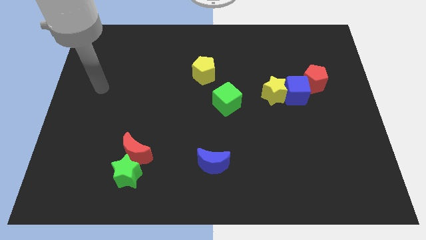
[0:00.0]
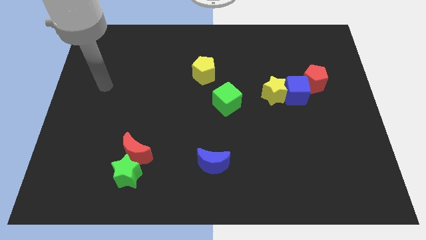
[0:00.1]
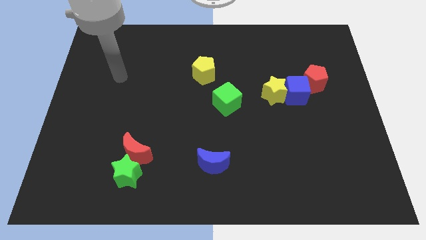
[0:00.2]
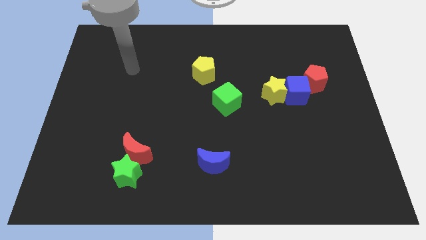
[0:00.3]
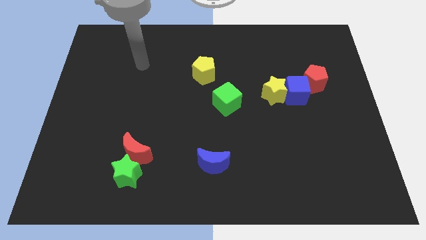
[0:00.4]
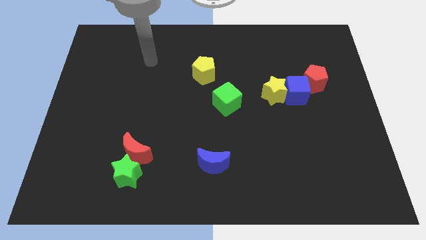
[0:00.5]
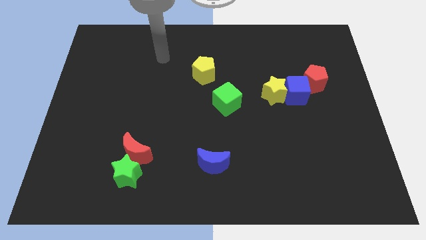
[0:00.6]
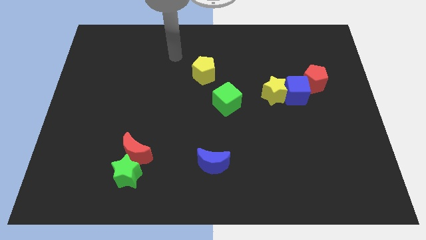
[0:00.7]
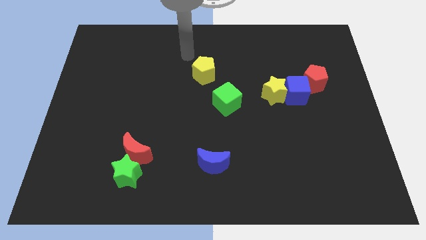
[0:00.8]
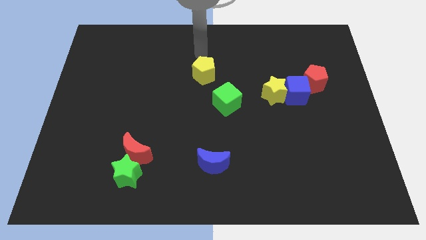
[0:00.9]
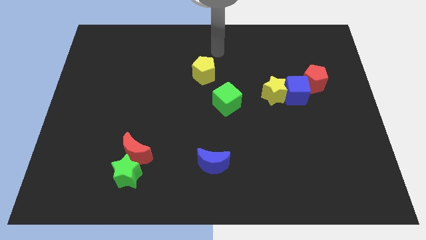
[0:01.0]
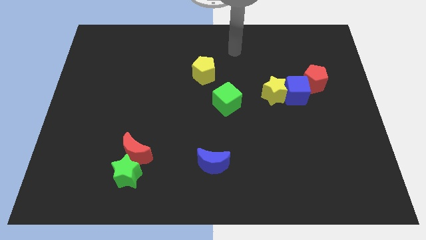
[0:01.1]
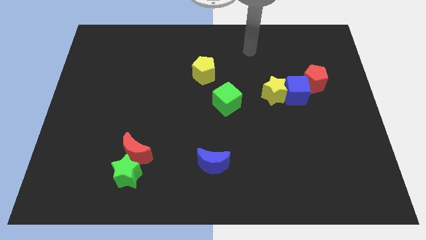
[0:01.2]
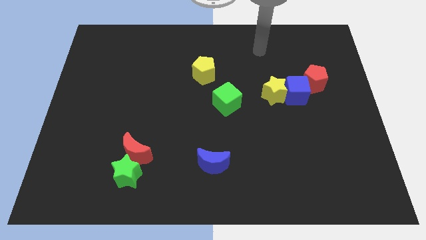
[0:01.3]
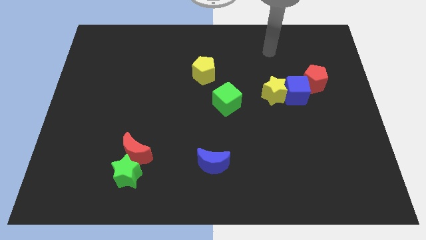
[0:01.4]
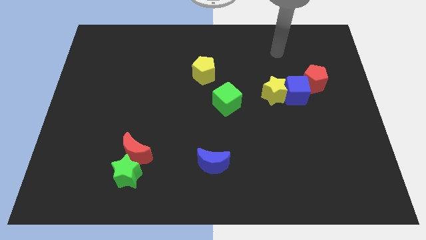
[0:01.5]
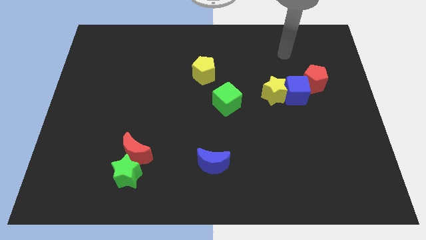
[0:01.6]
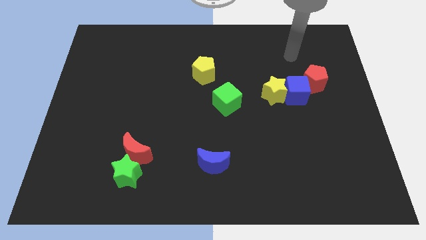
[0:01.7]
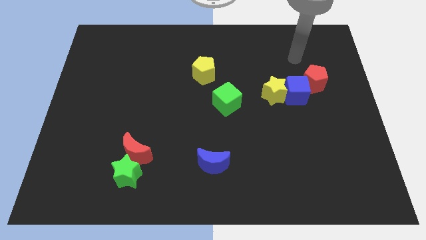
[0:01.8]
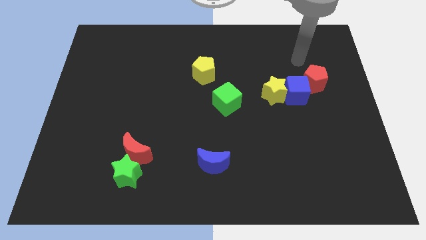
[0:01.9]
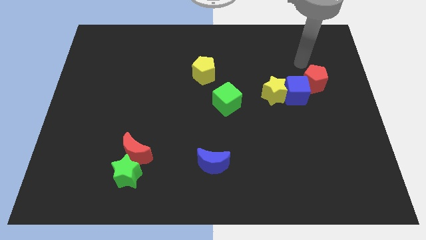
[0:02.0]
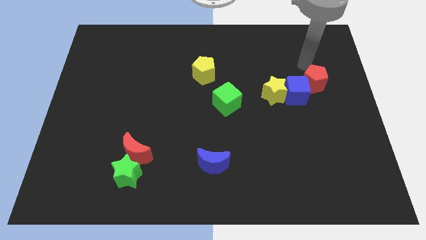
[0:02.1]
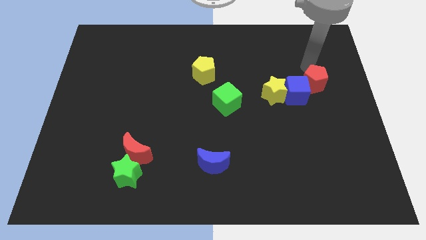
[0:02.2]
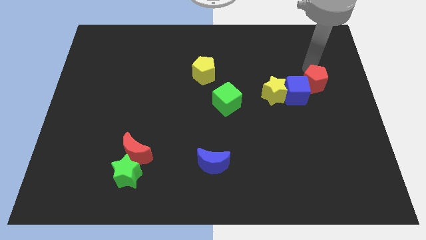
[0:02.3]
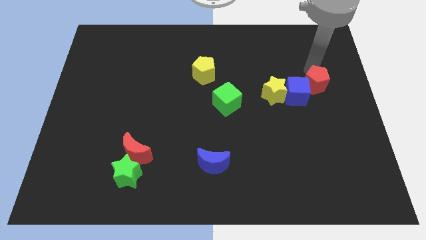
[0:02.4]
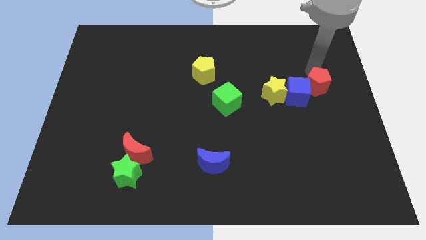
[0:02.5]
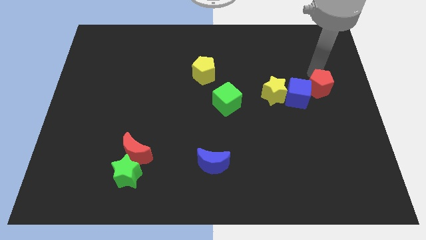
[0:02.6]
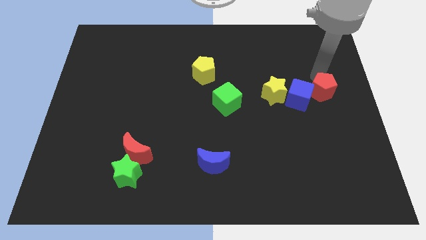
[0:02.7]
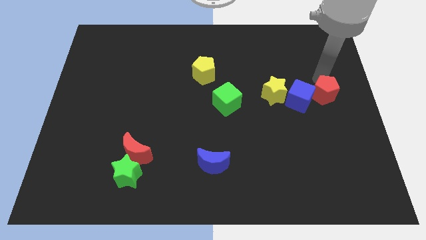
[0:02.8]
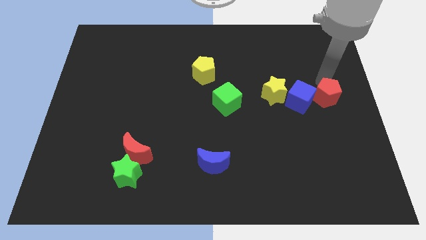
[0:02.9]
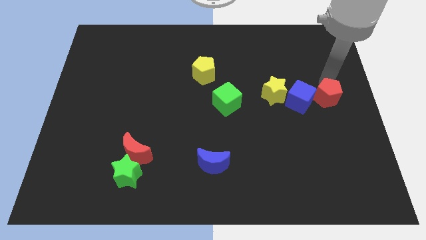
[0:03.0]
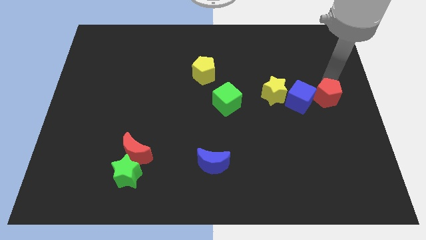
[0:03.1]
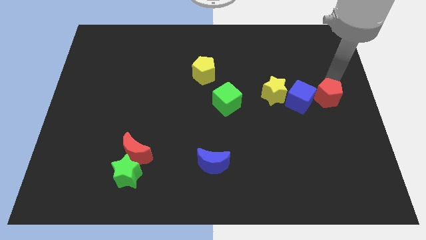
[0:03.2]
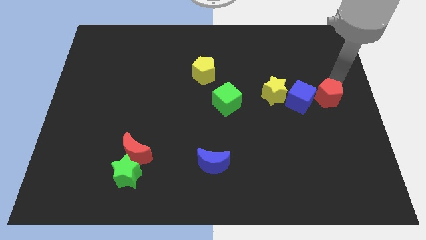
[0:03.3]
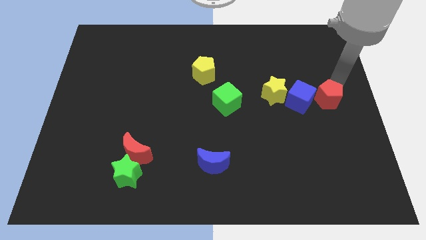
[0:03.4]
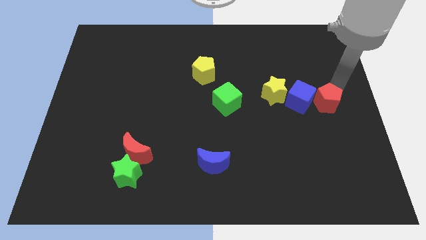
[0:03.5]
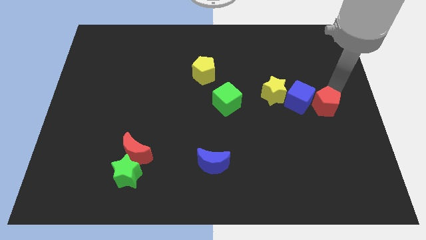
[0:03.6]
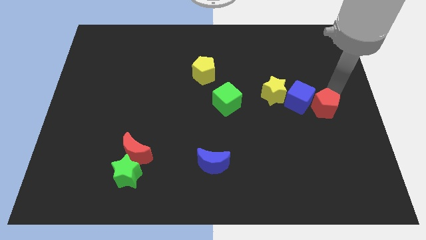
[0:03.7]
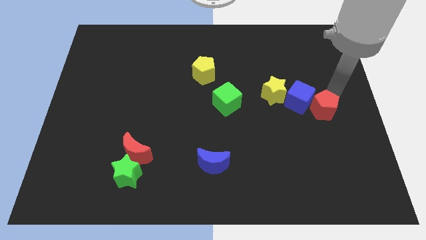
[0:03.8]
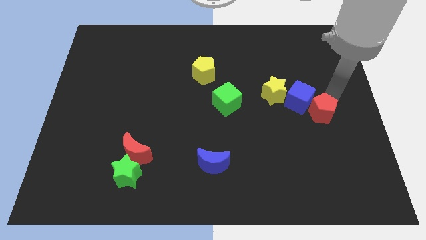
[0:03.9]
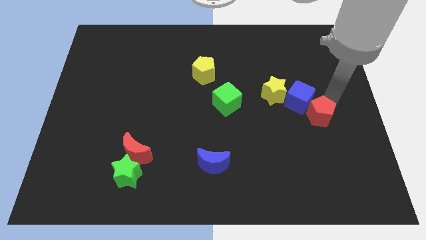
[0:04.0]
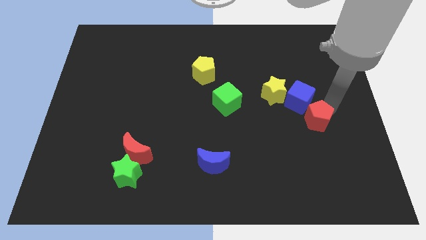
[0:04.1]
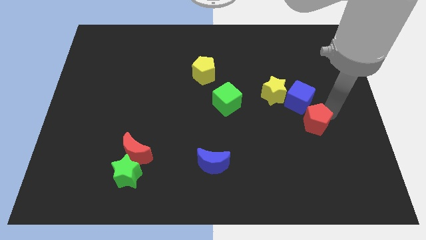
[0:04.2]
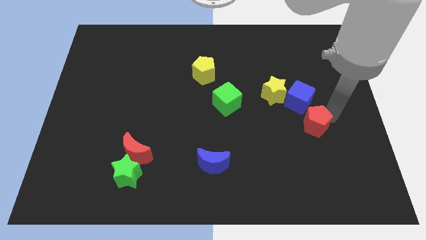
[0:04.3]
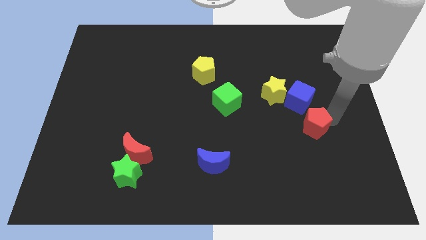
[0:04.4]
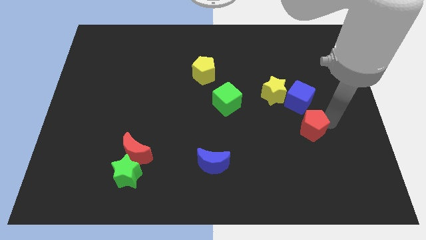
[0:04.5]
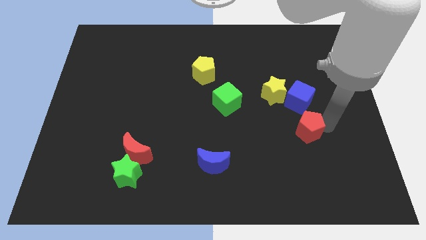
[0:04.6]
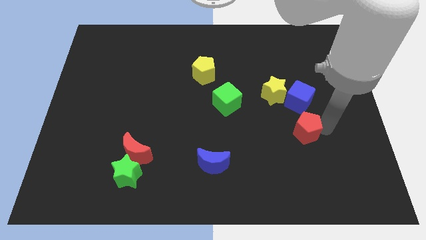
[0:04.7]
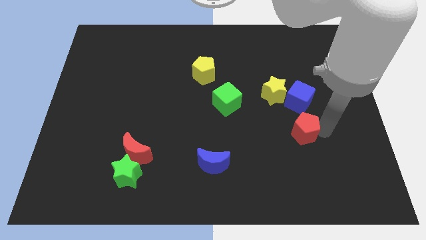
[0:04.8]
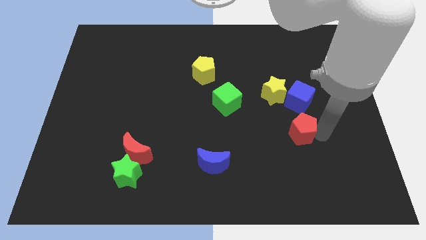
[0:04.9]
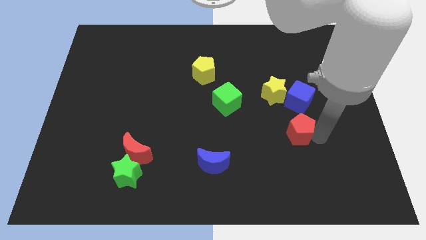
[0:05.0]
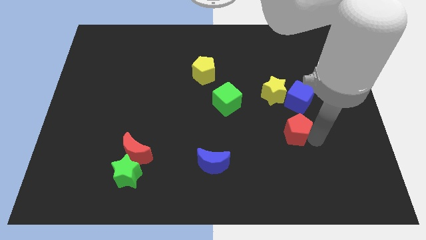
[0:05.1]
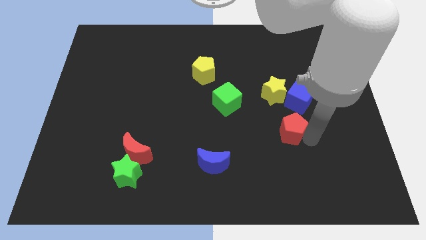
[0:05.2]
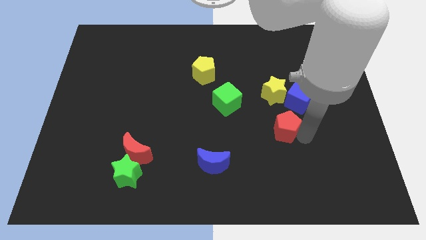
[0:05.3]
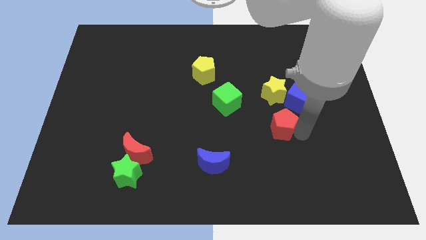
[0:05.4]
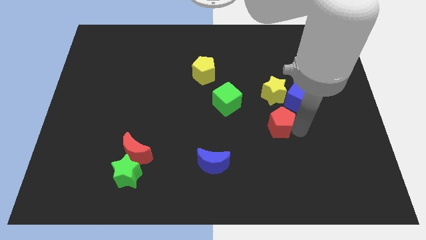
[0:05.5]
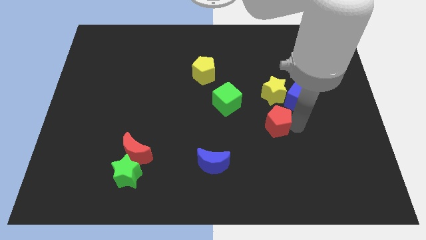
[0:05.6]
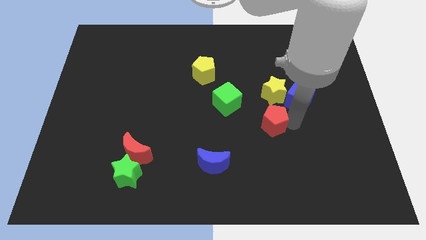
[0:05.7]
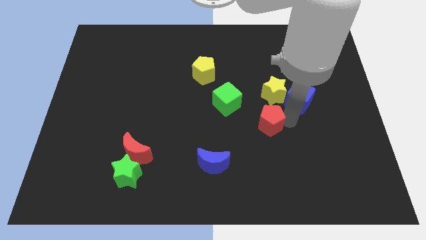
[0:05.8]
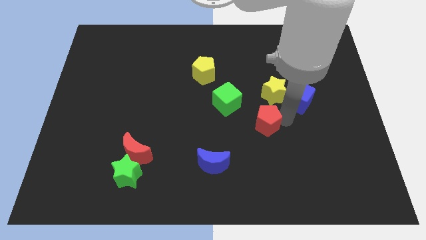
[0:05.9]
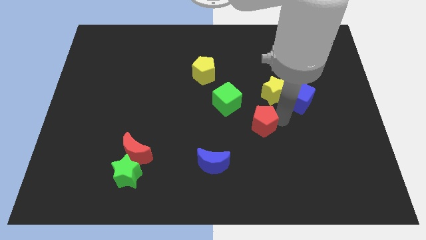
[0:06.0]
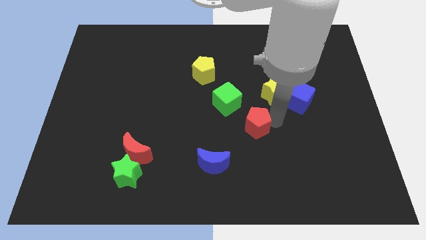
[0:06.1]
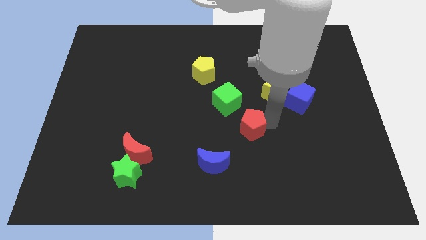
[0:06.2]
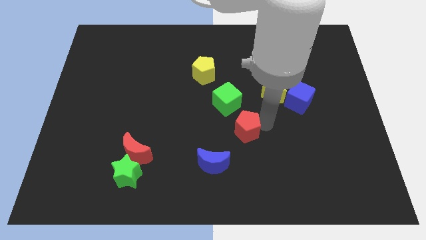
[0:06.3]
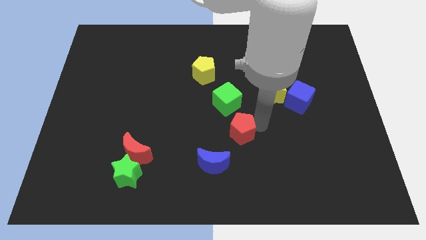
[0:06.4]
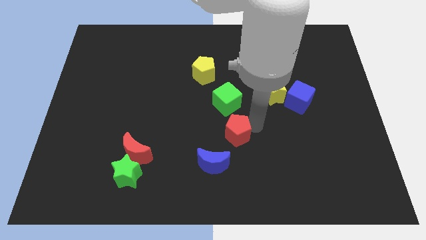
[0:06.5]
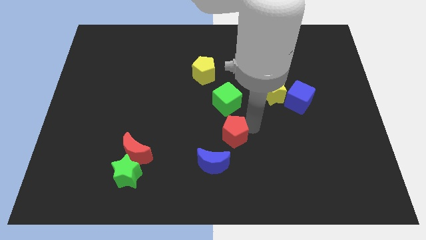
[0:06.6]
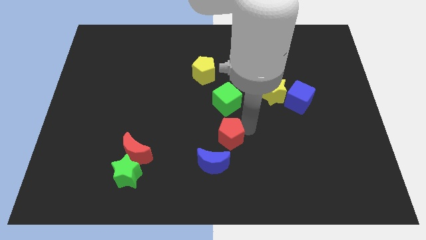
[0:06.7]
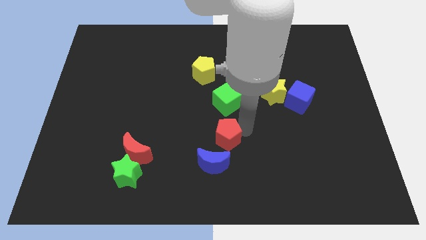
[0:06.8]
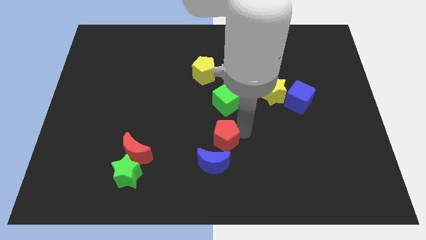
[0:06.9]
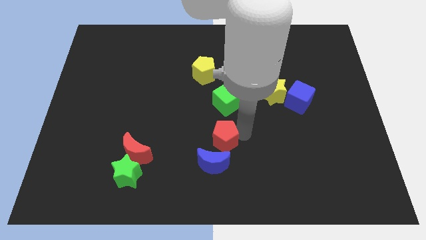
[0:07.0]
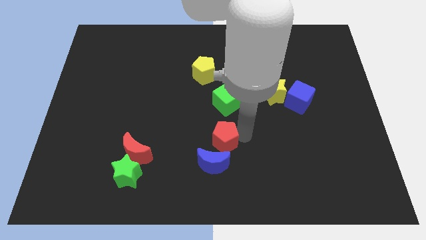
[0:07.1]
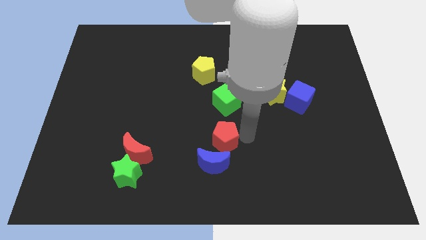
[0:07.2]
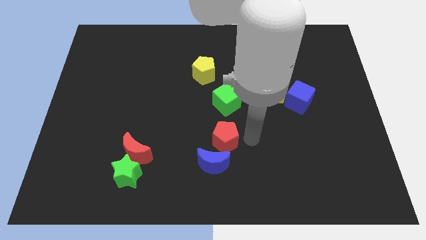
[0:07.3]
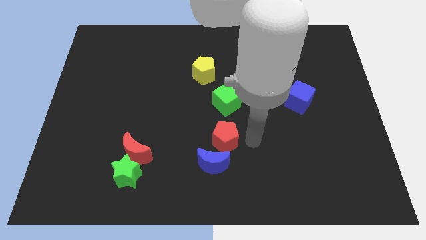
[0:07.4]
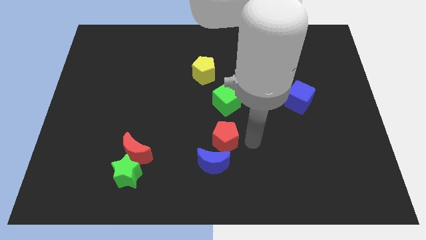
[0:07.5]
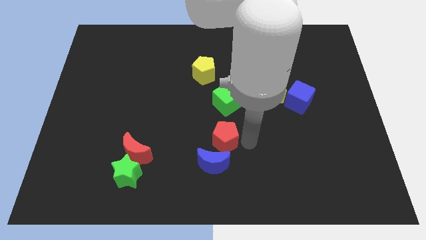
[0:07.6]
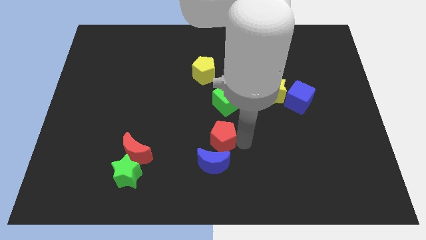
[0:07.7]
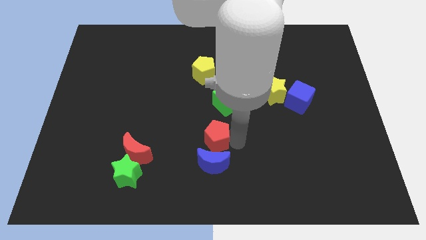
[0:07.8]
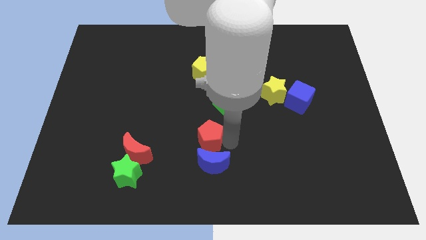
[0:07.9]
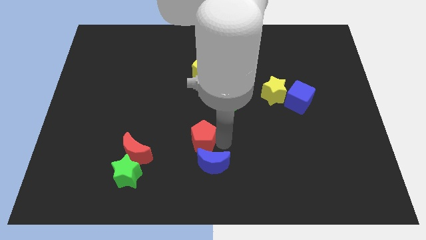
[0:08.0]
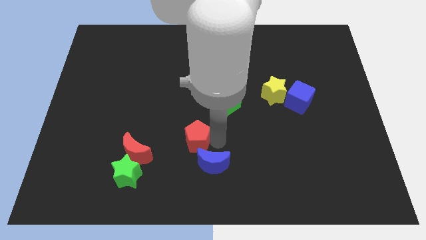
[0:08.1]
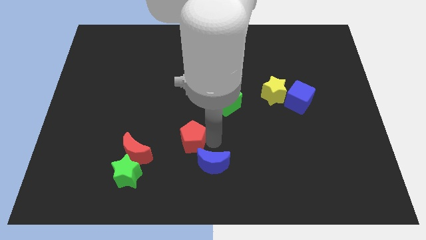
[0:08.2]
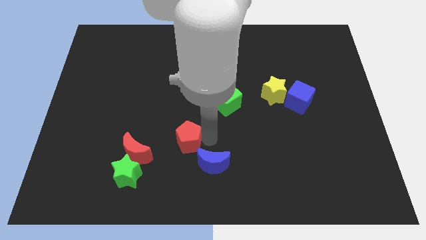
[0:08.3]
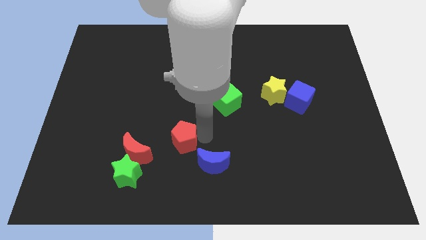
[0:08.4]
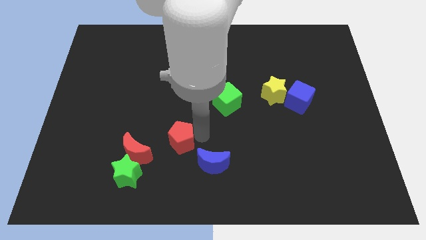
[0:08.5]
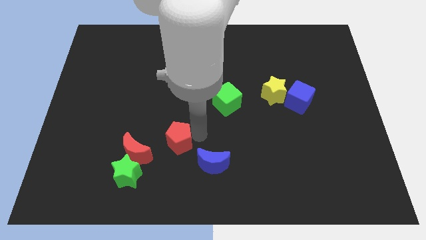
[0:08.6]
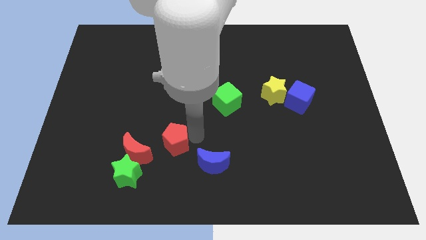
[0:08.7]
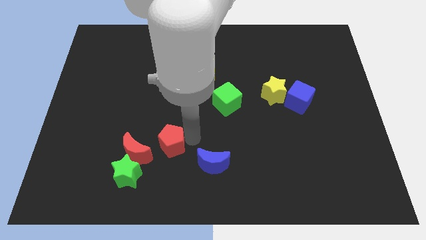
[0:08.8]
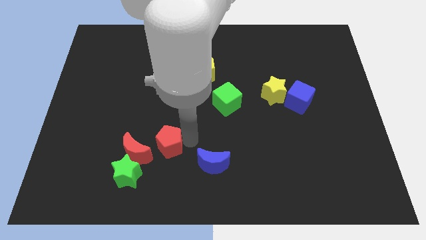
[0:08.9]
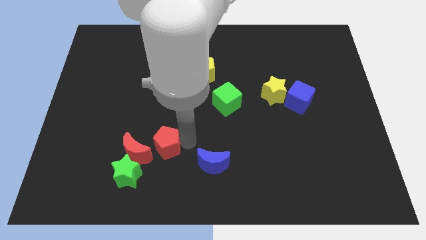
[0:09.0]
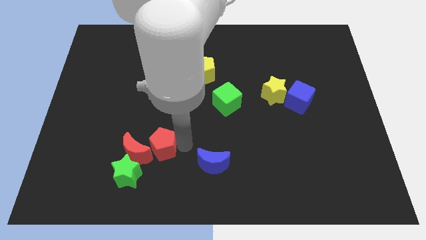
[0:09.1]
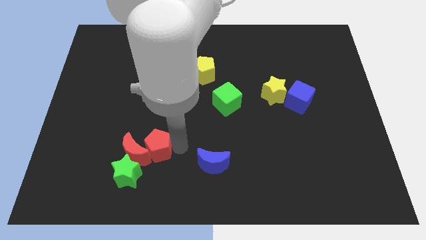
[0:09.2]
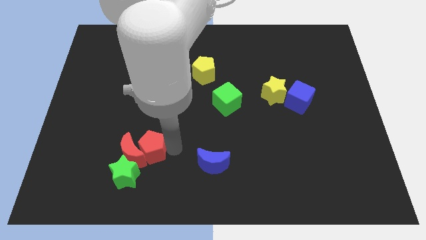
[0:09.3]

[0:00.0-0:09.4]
put the red pentagon close to the red moon
